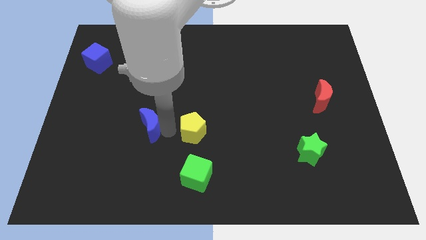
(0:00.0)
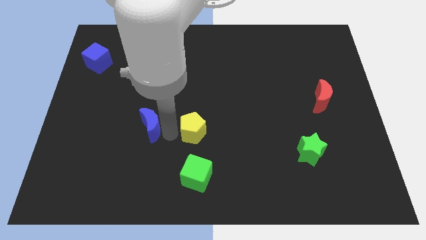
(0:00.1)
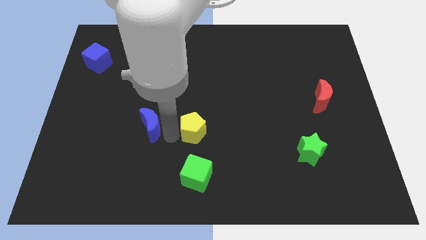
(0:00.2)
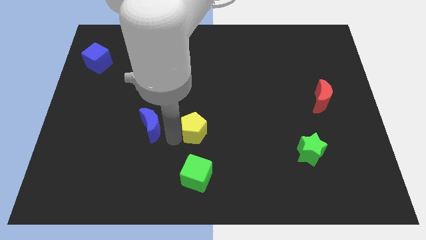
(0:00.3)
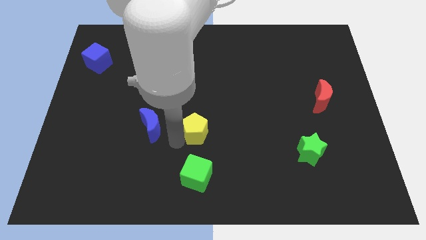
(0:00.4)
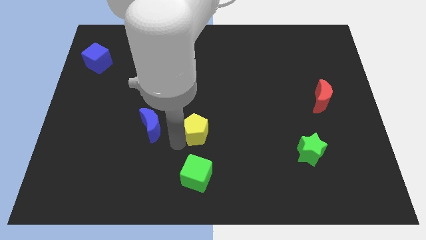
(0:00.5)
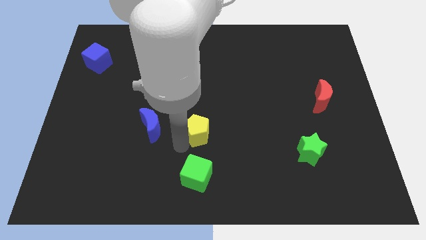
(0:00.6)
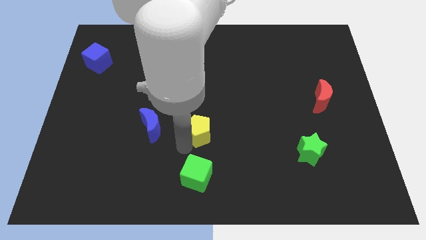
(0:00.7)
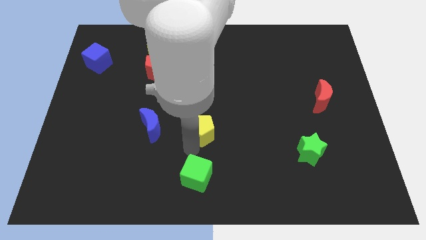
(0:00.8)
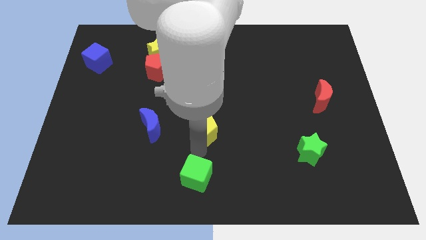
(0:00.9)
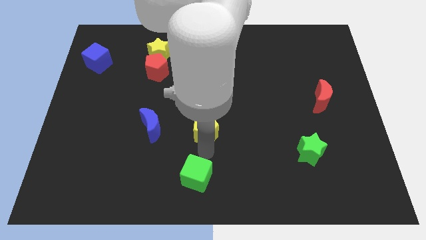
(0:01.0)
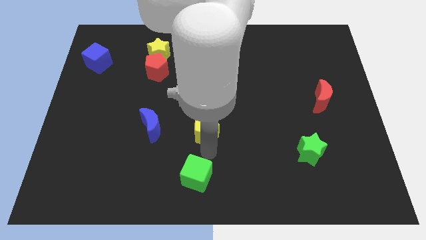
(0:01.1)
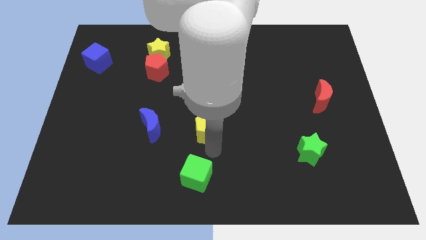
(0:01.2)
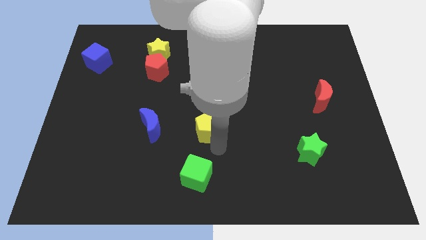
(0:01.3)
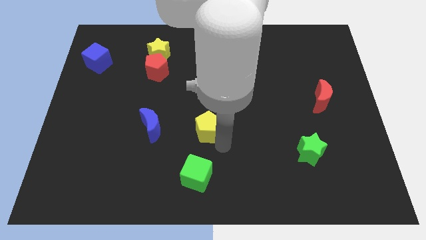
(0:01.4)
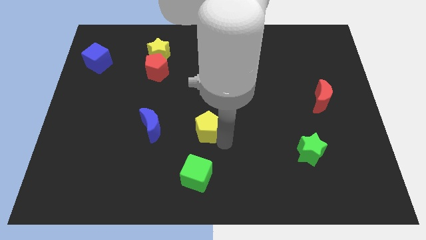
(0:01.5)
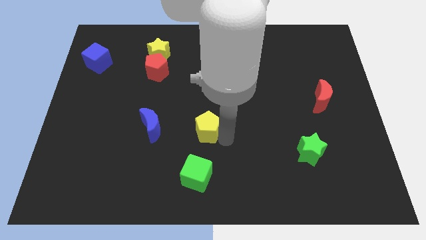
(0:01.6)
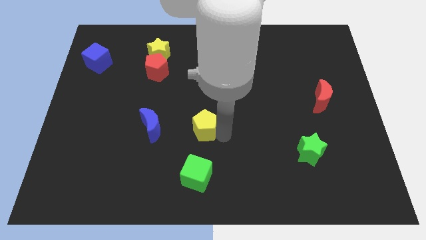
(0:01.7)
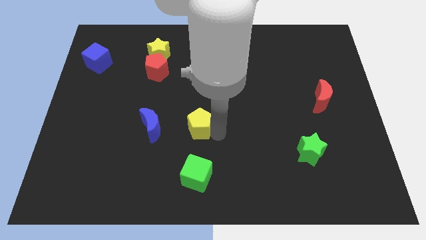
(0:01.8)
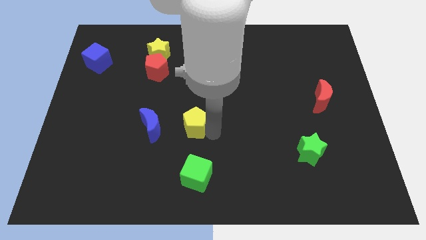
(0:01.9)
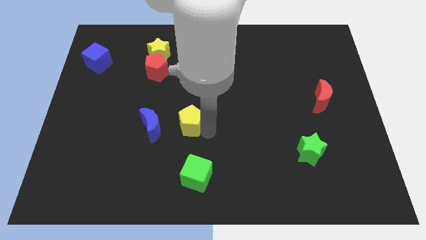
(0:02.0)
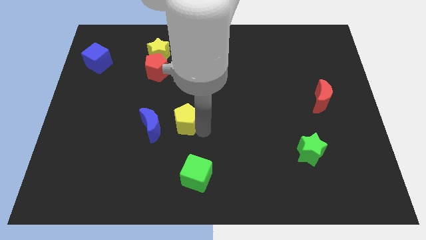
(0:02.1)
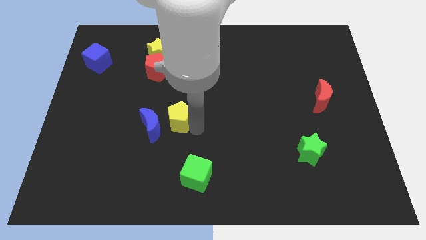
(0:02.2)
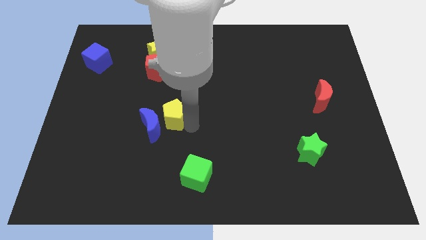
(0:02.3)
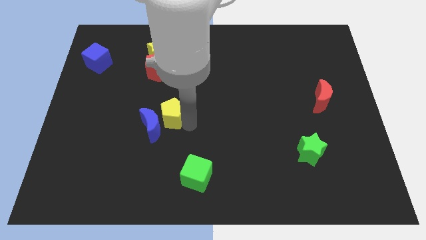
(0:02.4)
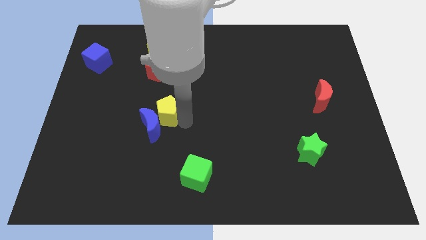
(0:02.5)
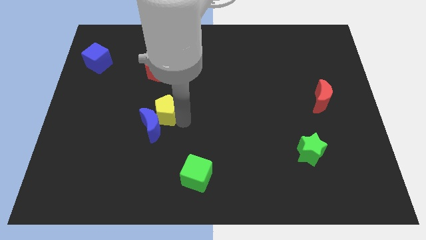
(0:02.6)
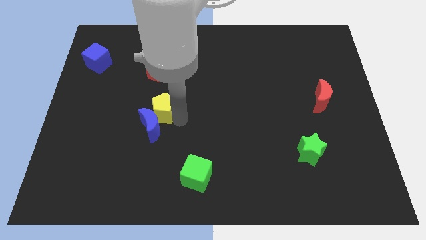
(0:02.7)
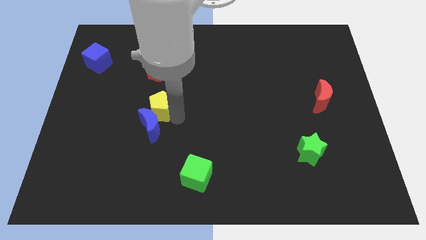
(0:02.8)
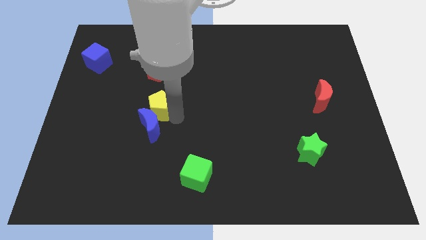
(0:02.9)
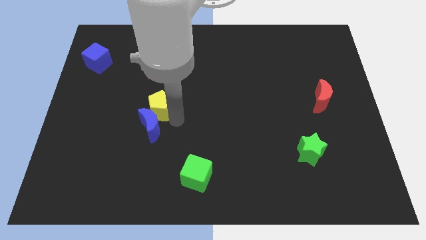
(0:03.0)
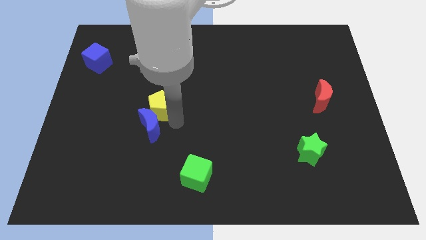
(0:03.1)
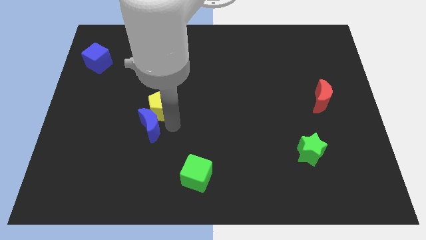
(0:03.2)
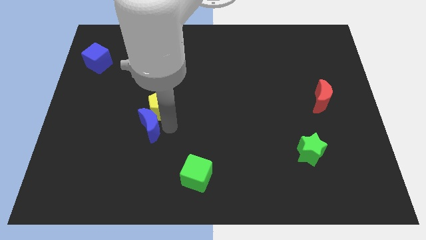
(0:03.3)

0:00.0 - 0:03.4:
push the yellow pentagon into the blue crescent

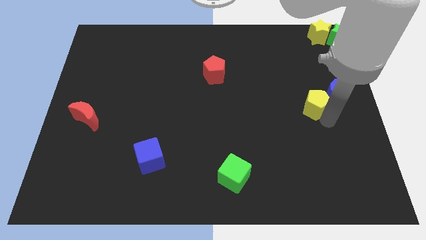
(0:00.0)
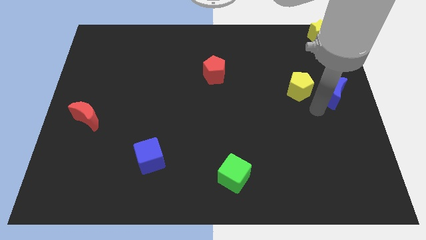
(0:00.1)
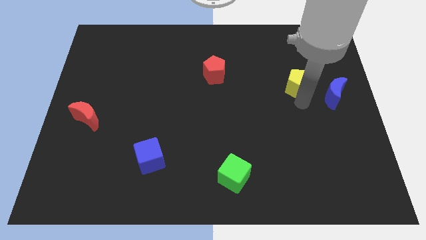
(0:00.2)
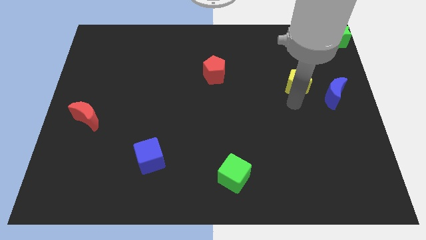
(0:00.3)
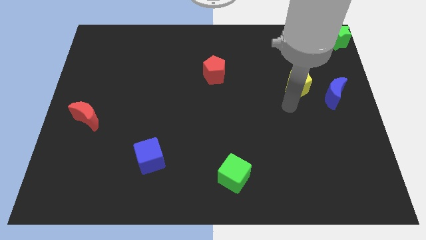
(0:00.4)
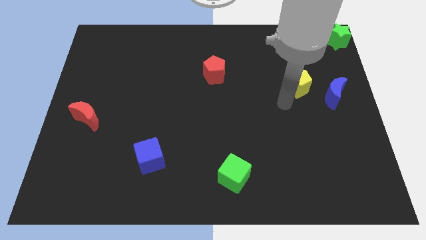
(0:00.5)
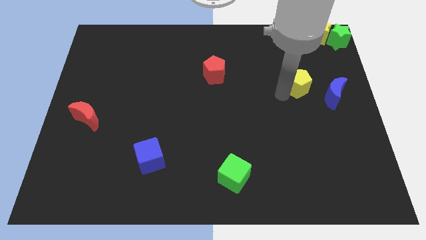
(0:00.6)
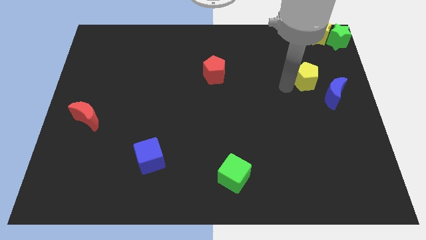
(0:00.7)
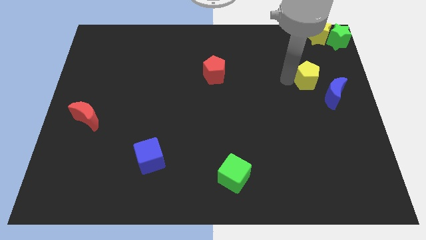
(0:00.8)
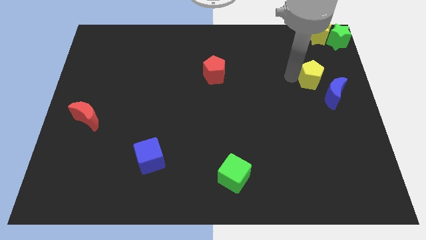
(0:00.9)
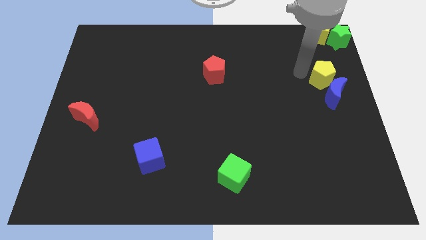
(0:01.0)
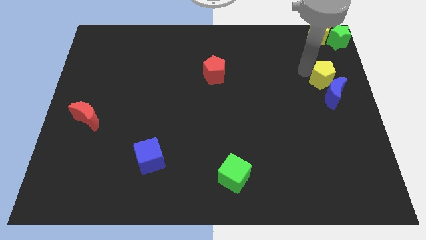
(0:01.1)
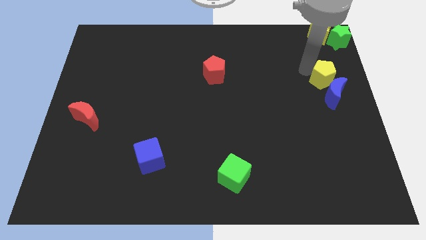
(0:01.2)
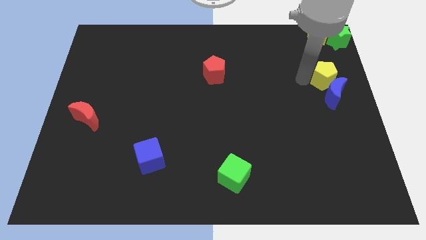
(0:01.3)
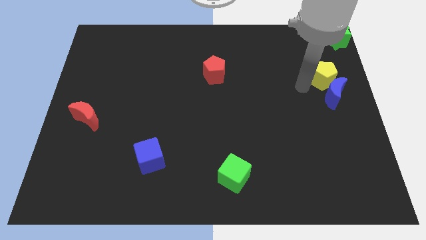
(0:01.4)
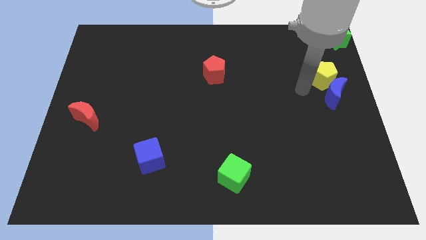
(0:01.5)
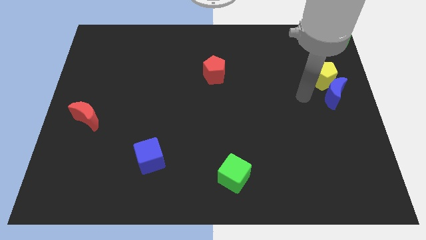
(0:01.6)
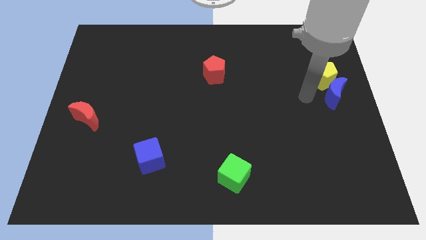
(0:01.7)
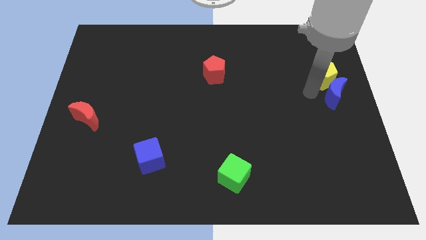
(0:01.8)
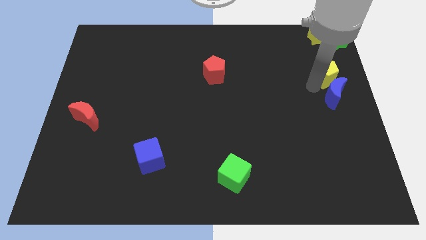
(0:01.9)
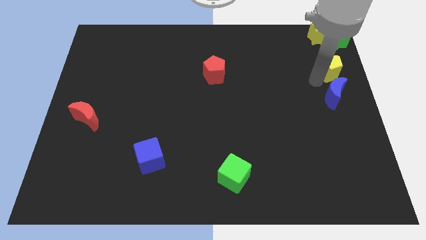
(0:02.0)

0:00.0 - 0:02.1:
place the yellow pentagon in between the green star and blue moon

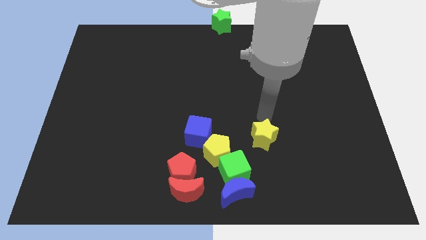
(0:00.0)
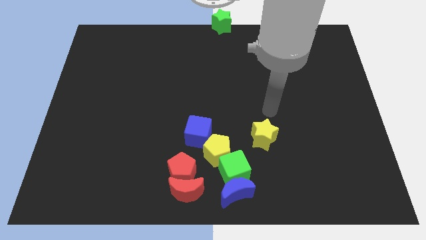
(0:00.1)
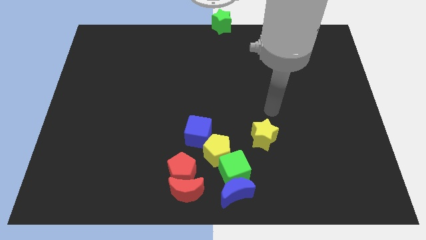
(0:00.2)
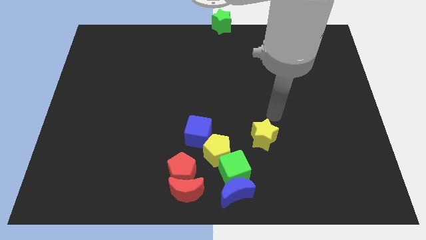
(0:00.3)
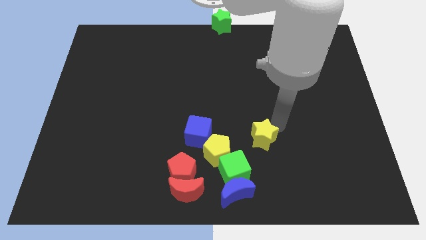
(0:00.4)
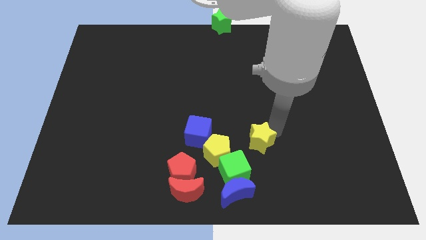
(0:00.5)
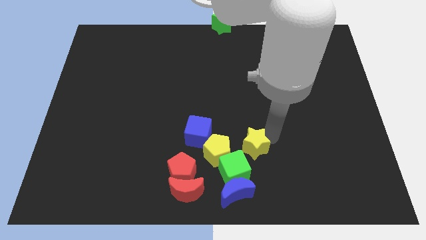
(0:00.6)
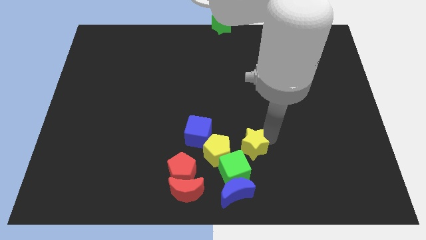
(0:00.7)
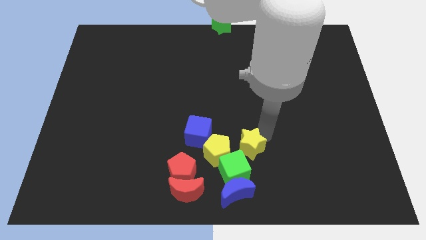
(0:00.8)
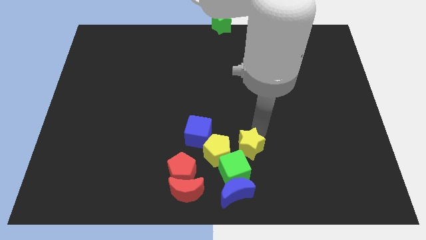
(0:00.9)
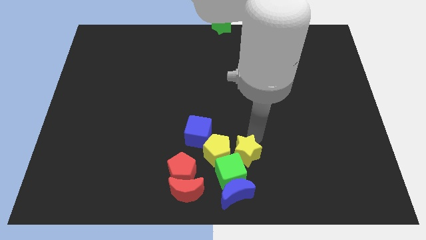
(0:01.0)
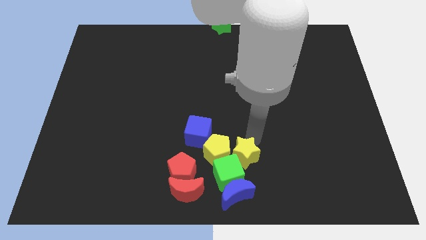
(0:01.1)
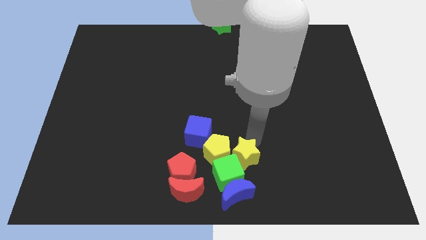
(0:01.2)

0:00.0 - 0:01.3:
push the yellow star into the green cube

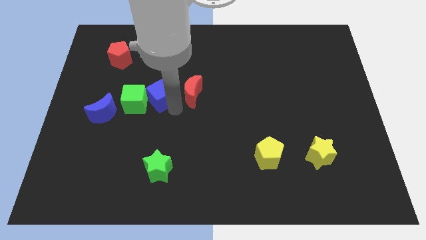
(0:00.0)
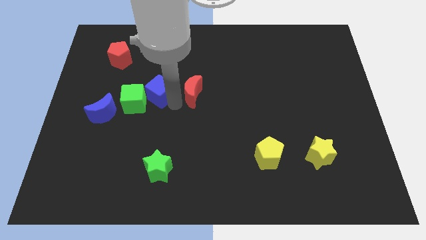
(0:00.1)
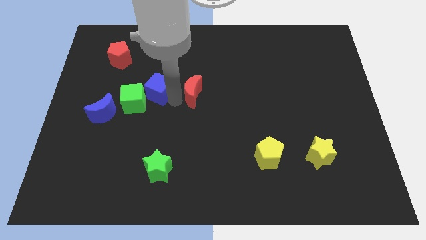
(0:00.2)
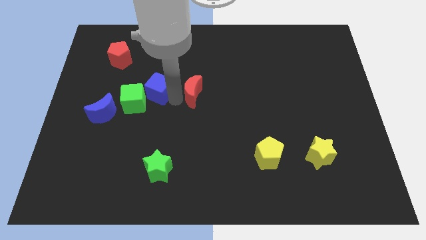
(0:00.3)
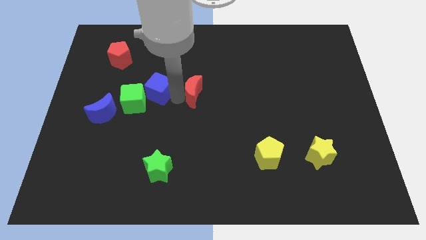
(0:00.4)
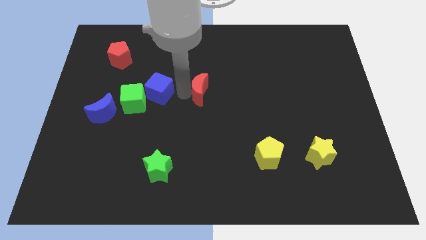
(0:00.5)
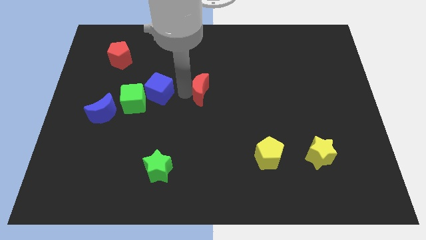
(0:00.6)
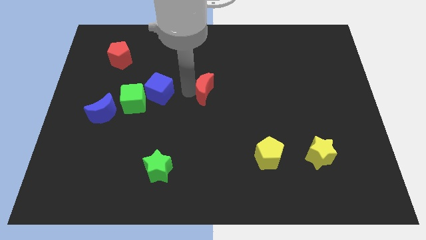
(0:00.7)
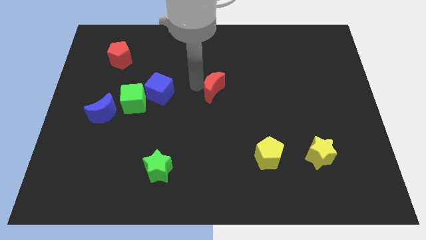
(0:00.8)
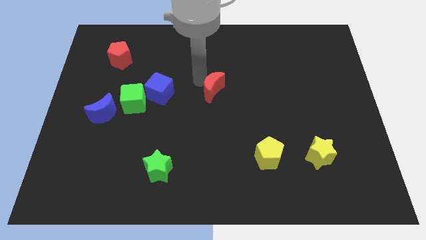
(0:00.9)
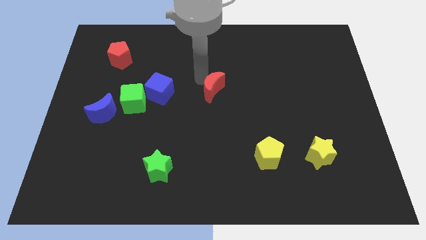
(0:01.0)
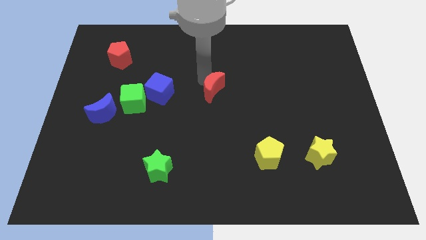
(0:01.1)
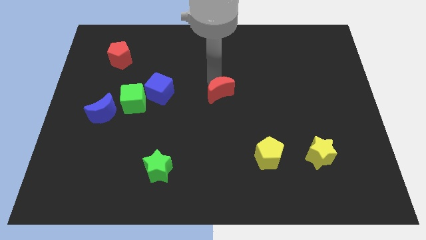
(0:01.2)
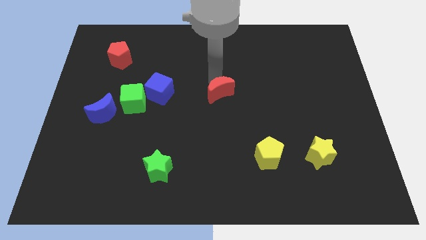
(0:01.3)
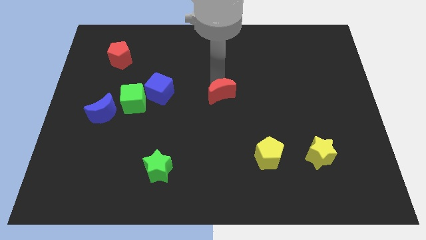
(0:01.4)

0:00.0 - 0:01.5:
move the red moon to the center of the board

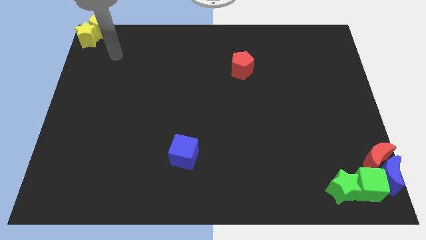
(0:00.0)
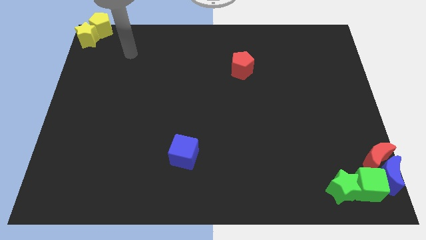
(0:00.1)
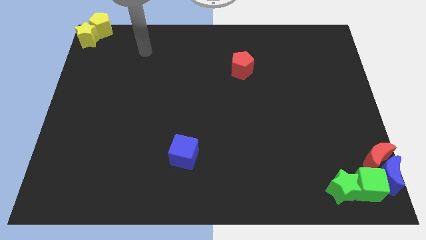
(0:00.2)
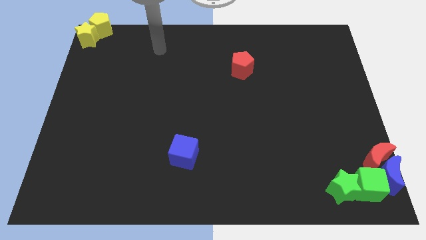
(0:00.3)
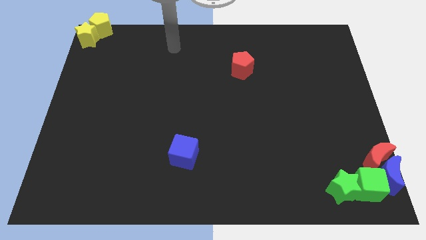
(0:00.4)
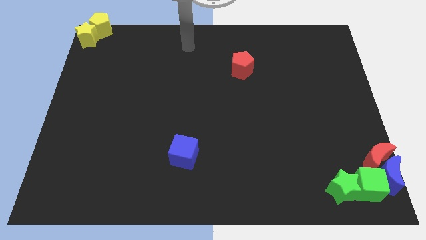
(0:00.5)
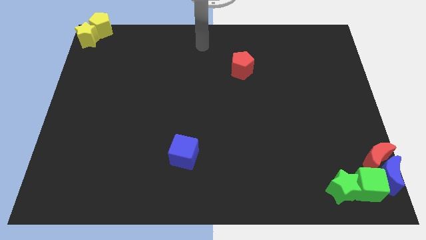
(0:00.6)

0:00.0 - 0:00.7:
move the arm towards top centre of the board

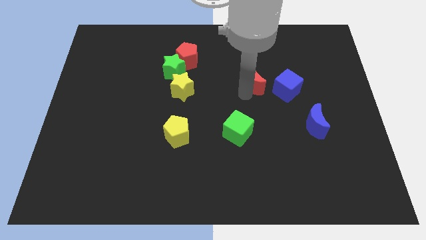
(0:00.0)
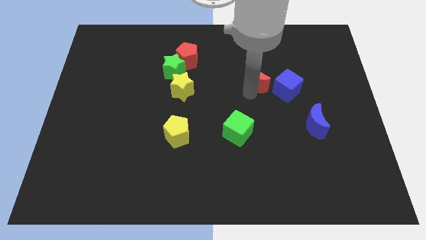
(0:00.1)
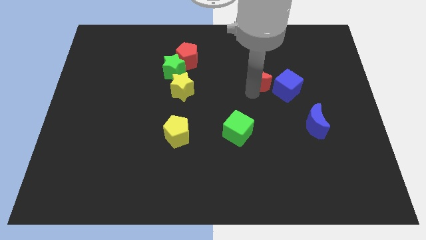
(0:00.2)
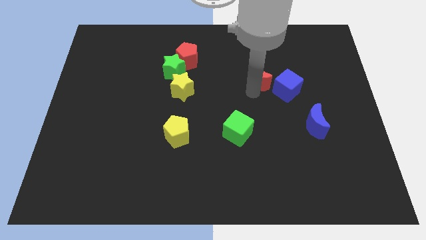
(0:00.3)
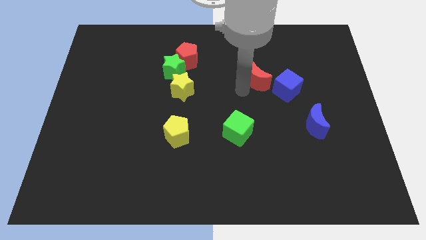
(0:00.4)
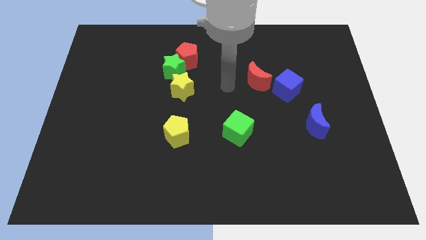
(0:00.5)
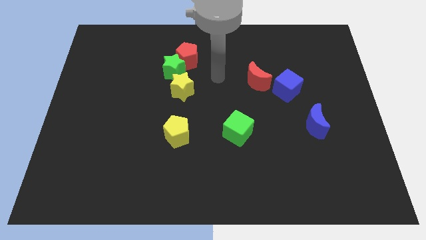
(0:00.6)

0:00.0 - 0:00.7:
push the red crescent close to the blue cube
